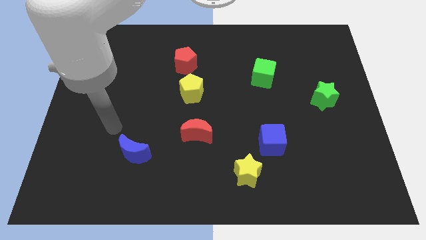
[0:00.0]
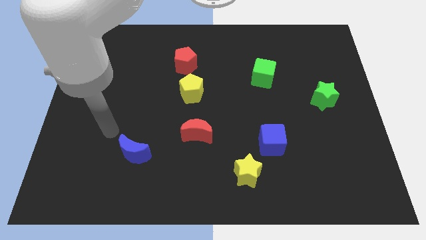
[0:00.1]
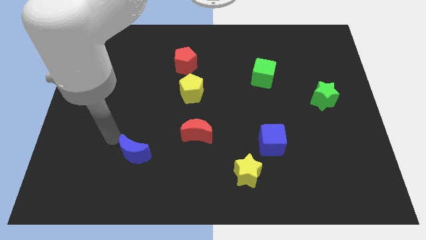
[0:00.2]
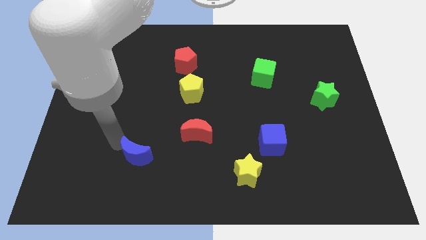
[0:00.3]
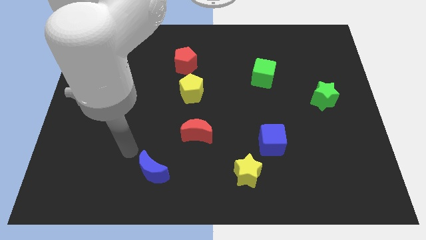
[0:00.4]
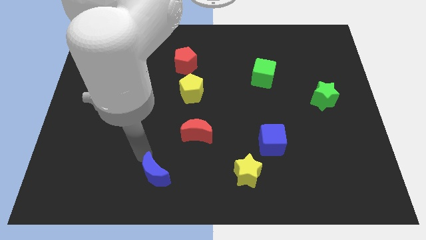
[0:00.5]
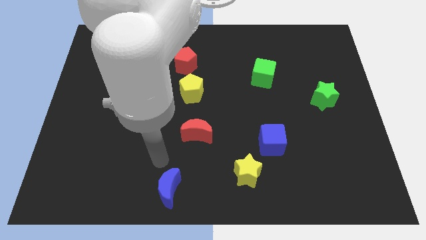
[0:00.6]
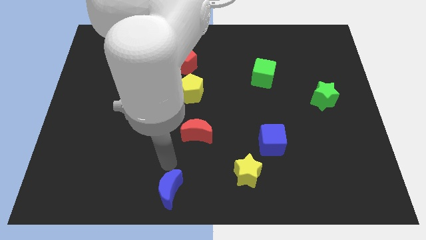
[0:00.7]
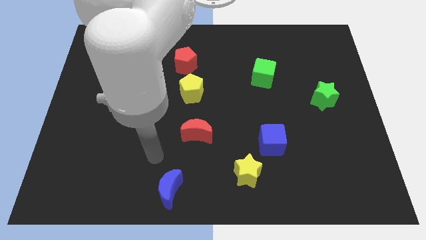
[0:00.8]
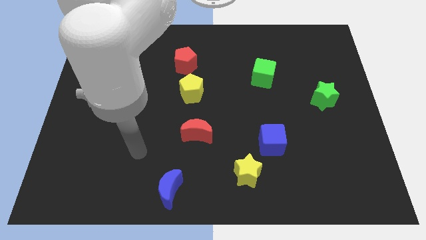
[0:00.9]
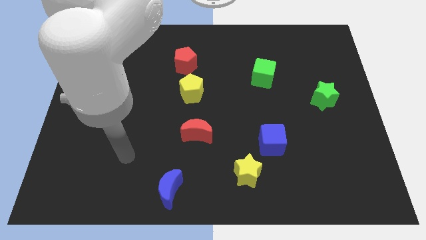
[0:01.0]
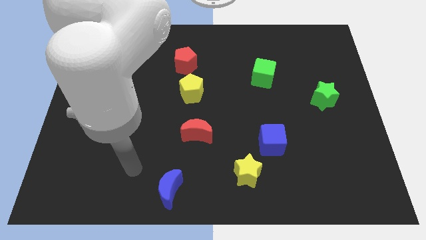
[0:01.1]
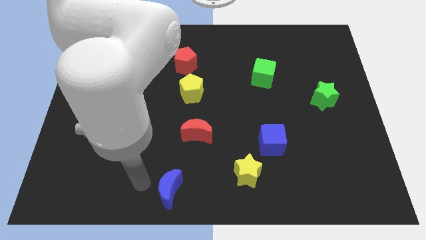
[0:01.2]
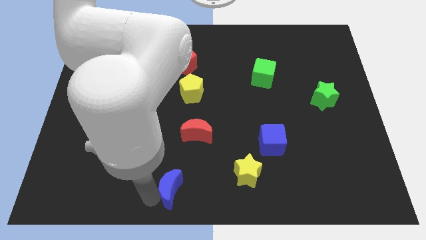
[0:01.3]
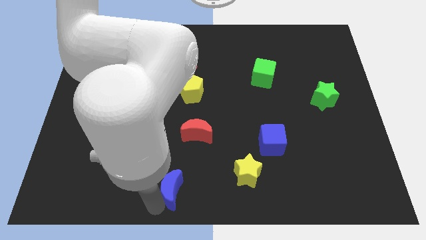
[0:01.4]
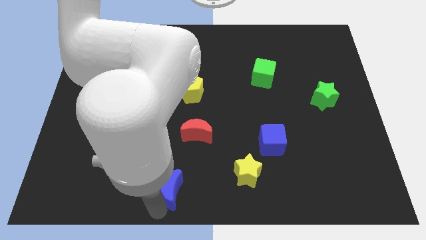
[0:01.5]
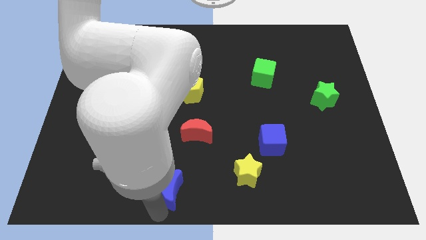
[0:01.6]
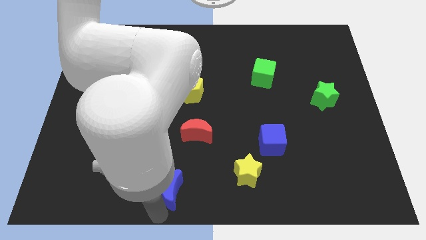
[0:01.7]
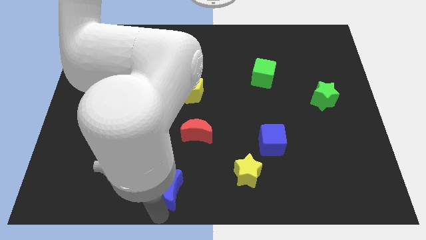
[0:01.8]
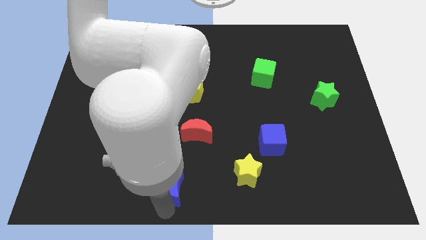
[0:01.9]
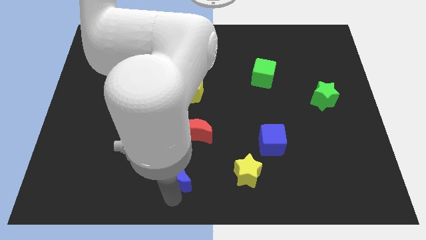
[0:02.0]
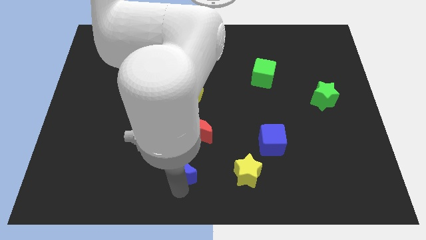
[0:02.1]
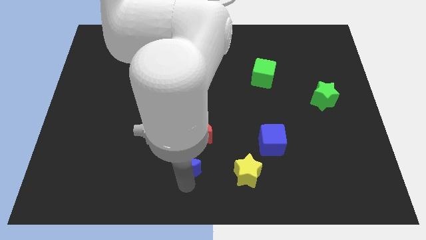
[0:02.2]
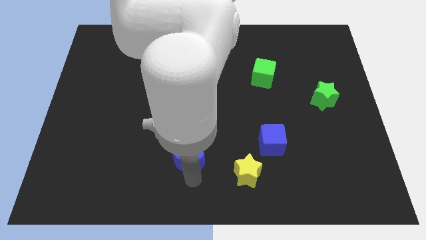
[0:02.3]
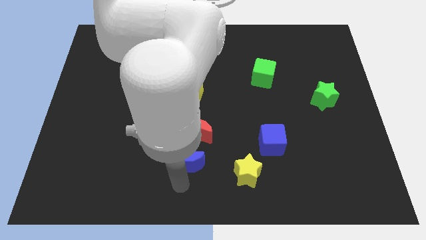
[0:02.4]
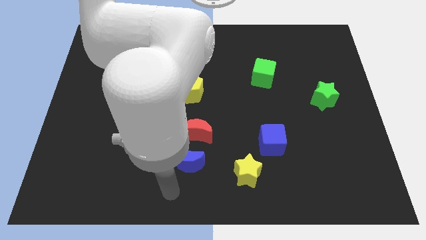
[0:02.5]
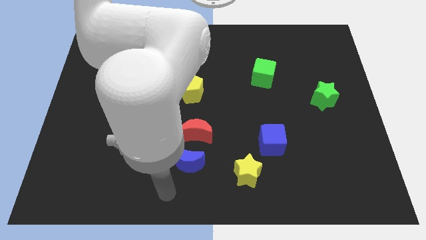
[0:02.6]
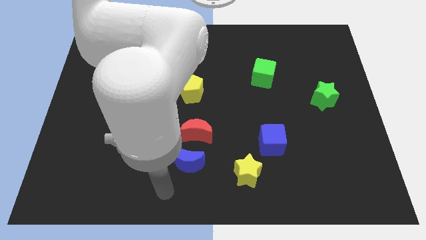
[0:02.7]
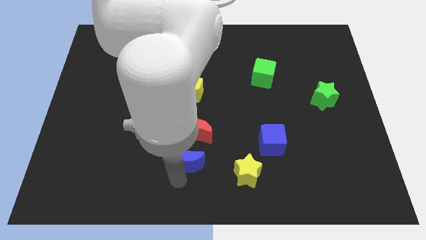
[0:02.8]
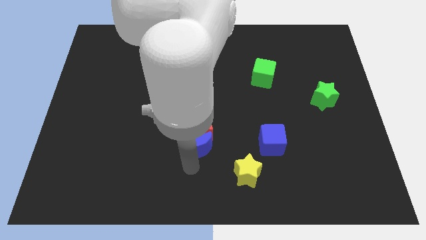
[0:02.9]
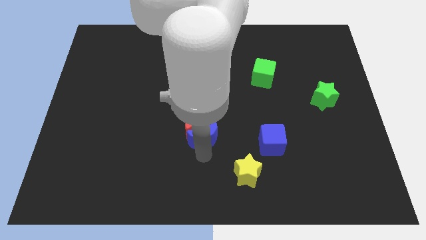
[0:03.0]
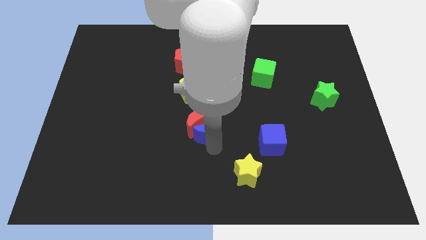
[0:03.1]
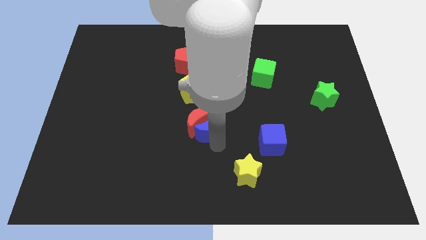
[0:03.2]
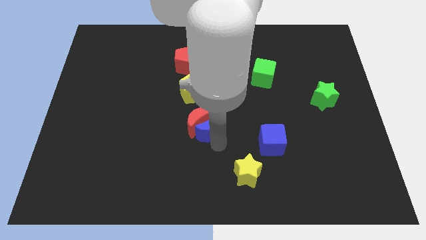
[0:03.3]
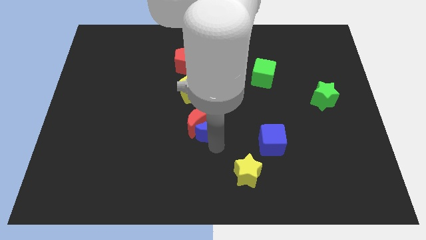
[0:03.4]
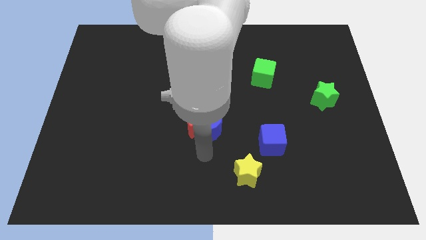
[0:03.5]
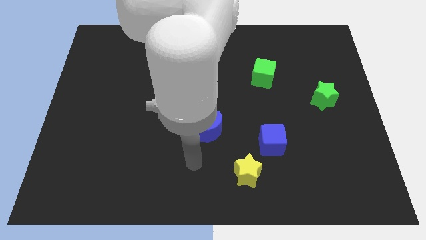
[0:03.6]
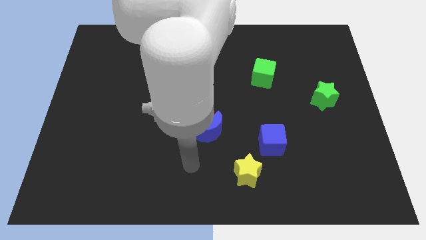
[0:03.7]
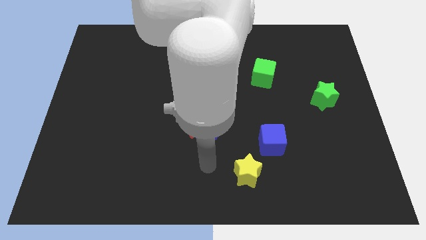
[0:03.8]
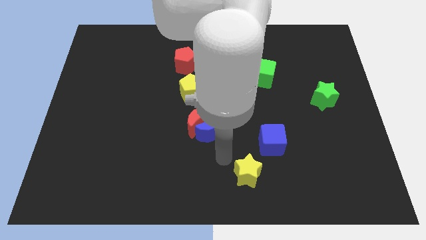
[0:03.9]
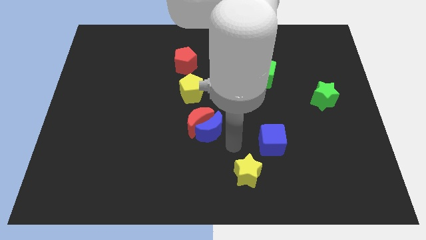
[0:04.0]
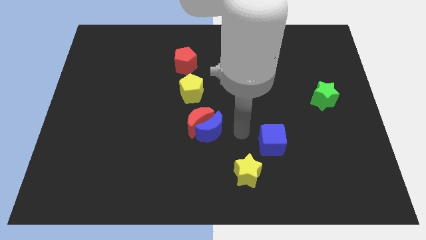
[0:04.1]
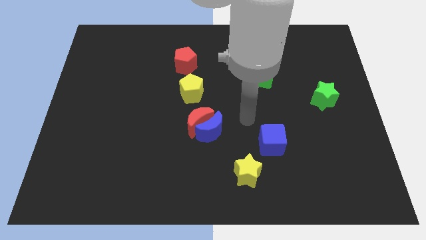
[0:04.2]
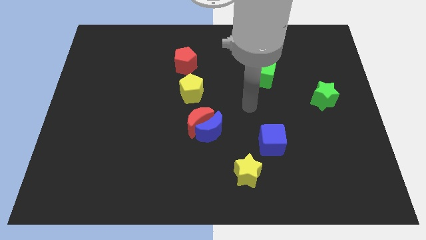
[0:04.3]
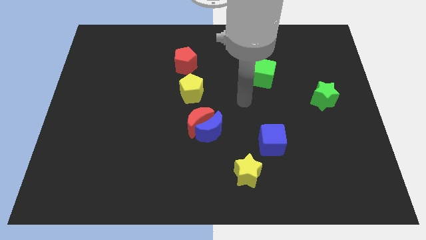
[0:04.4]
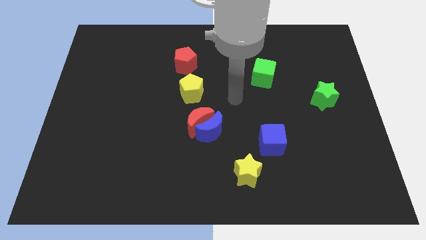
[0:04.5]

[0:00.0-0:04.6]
push the blue crescent into the red crescent

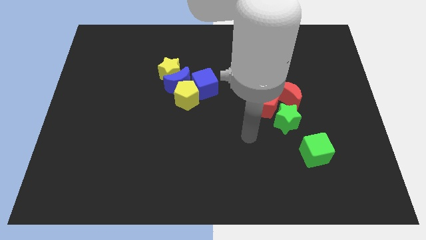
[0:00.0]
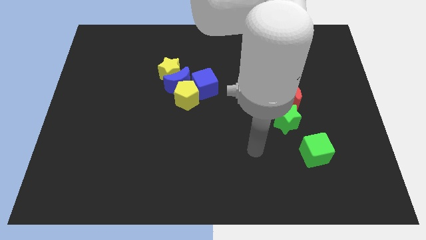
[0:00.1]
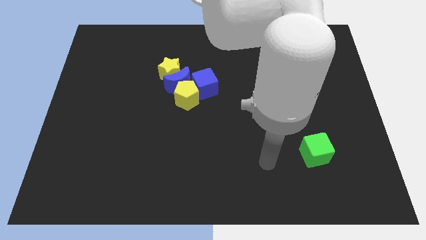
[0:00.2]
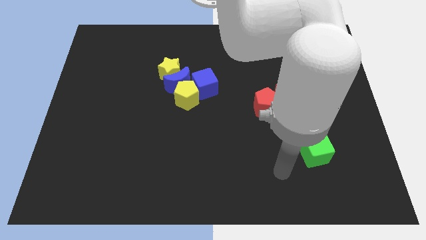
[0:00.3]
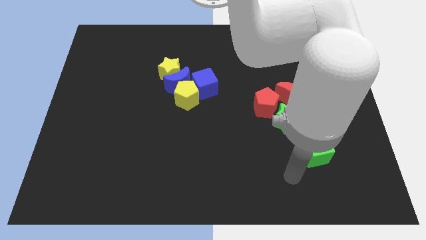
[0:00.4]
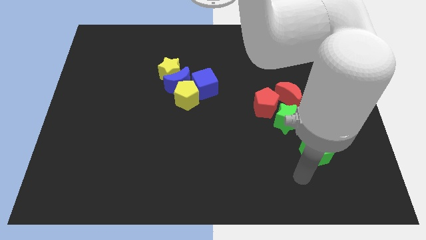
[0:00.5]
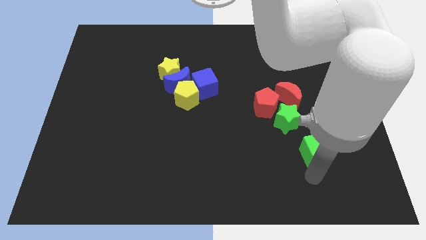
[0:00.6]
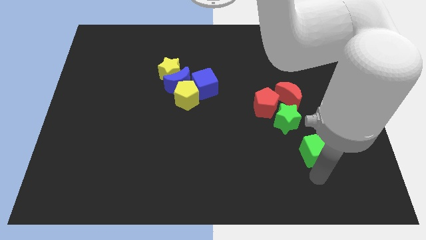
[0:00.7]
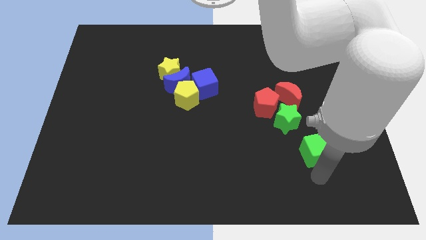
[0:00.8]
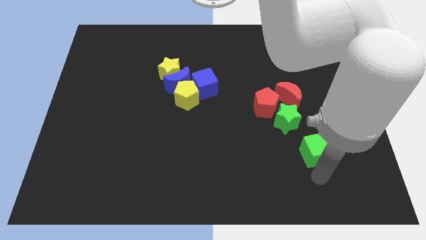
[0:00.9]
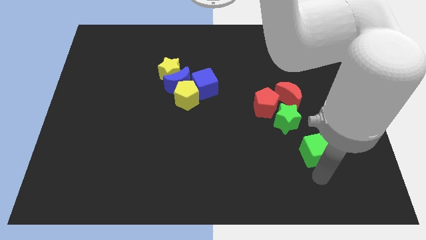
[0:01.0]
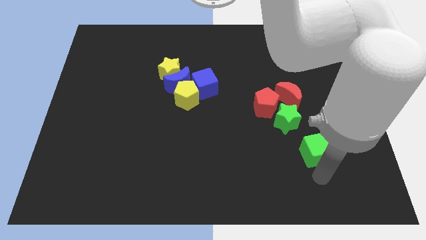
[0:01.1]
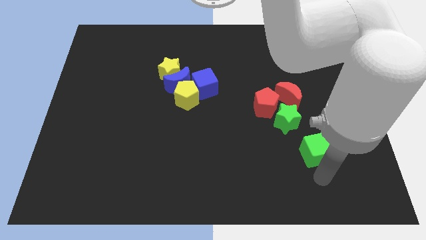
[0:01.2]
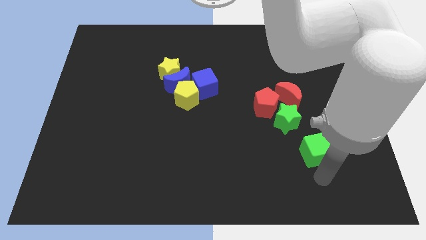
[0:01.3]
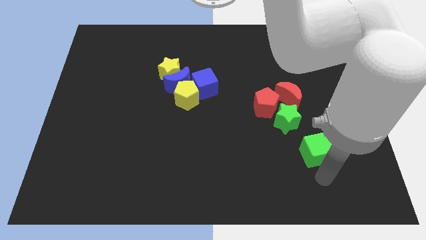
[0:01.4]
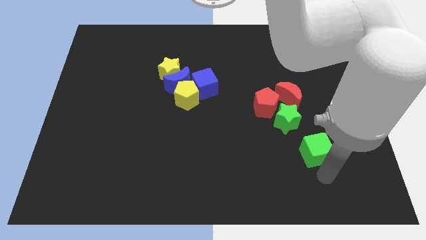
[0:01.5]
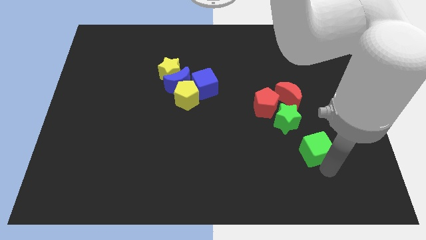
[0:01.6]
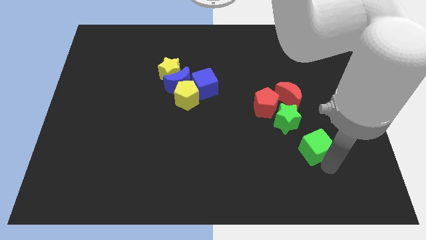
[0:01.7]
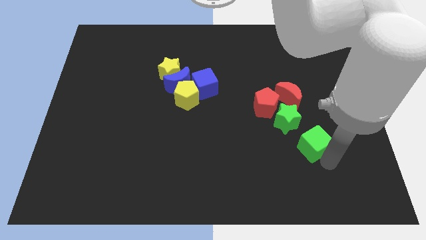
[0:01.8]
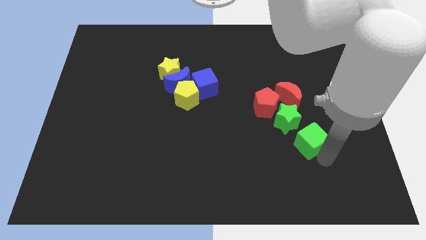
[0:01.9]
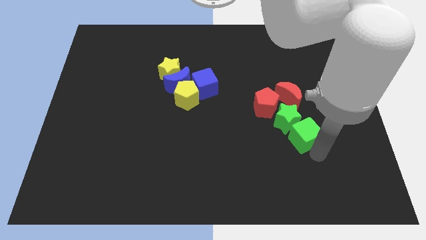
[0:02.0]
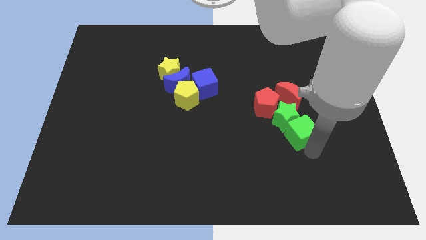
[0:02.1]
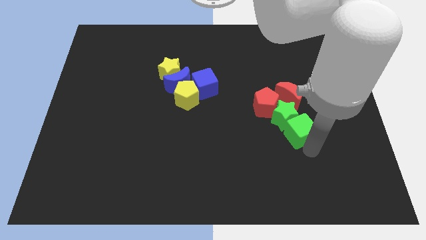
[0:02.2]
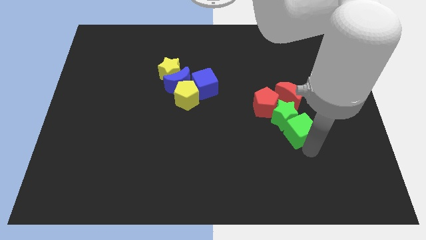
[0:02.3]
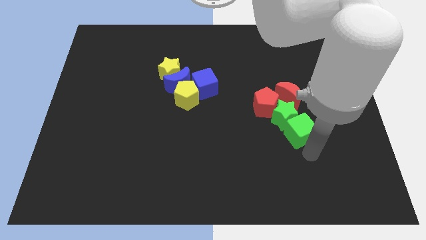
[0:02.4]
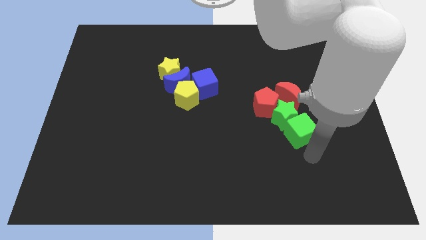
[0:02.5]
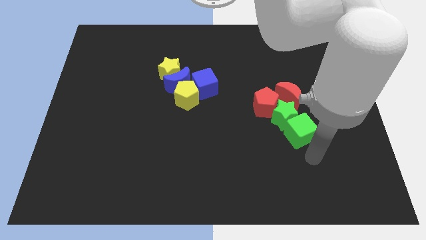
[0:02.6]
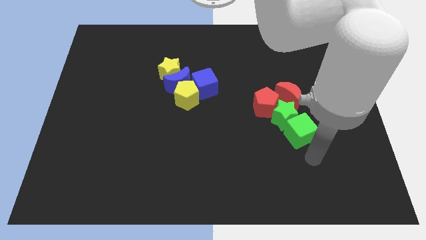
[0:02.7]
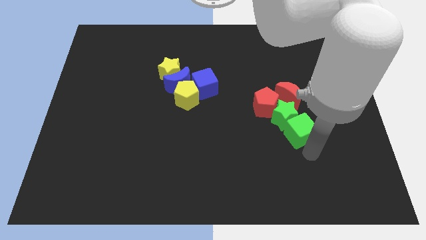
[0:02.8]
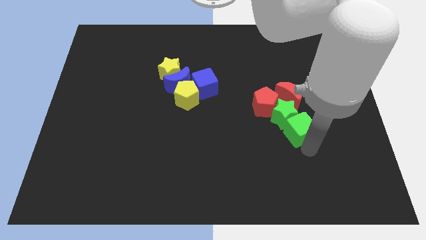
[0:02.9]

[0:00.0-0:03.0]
push green cube into the green star

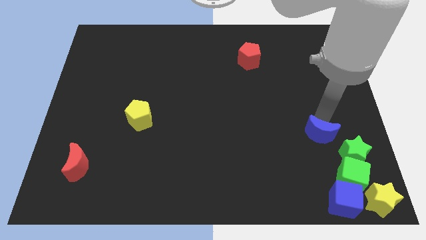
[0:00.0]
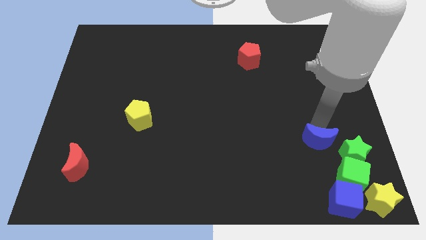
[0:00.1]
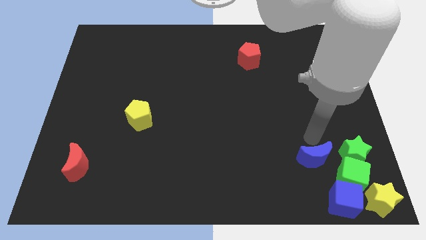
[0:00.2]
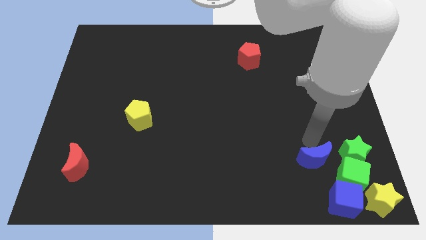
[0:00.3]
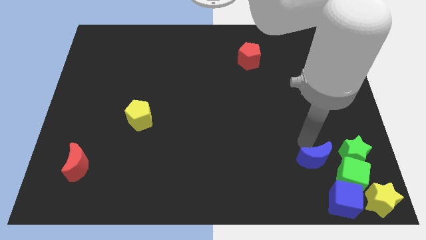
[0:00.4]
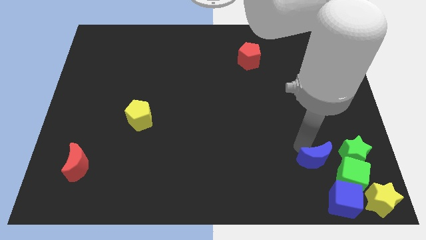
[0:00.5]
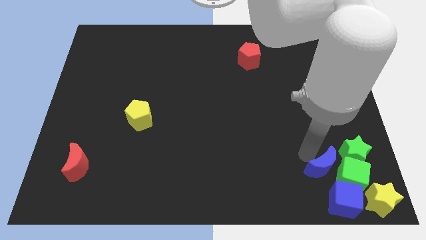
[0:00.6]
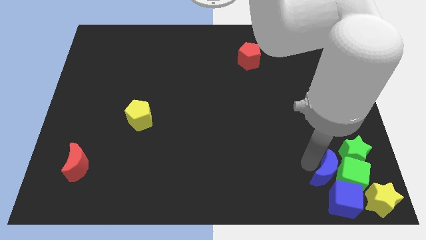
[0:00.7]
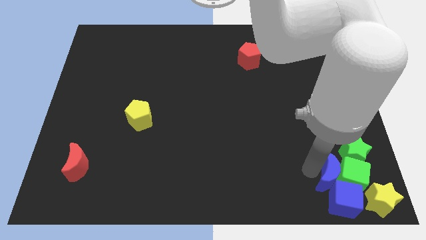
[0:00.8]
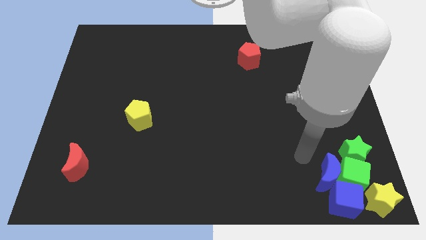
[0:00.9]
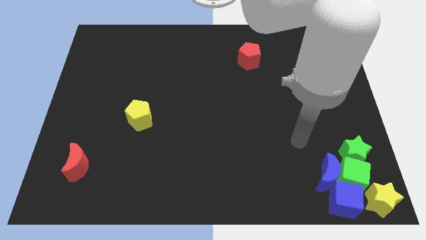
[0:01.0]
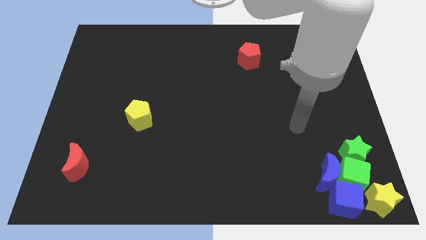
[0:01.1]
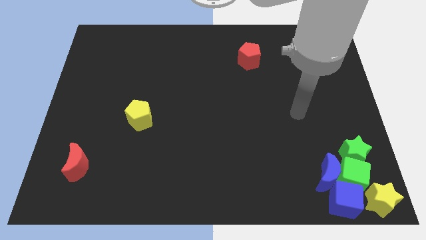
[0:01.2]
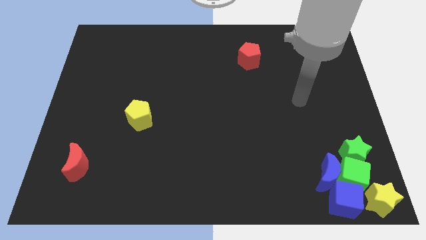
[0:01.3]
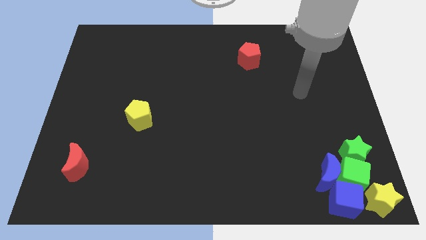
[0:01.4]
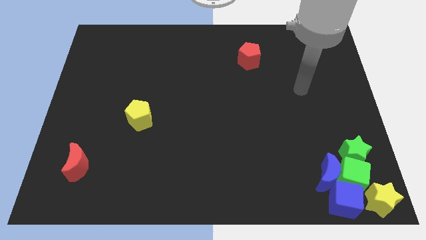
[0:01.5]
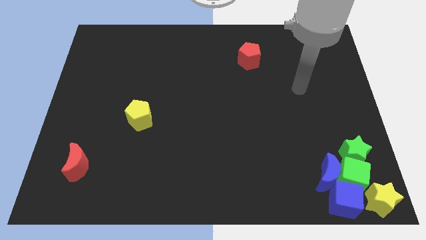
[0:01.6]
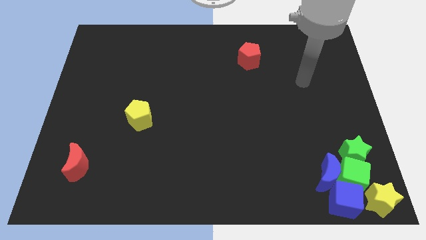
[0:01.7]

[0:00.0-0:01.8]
move the blue moon left to the green cube
